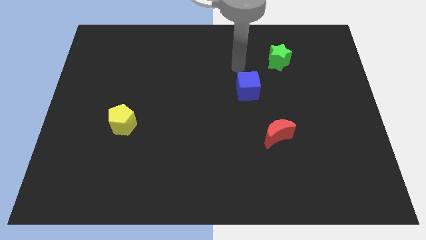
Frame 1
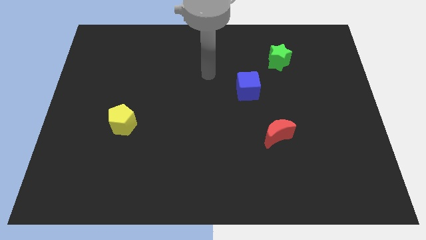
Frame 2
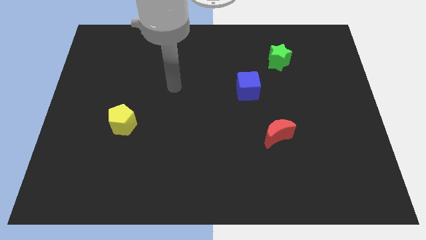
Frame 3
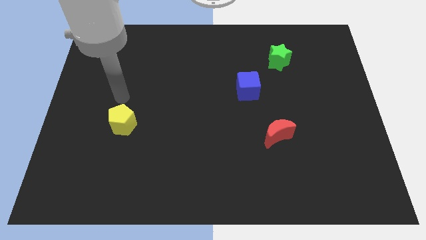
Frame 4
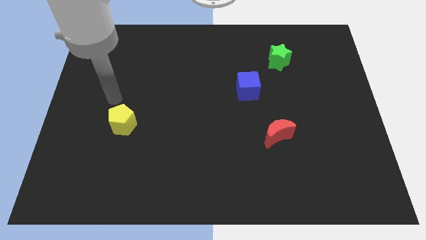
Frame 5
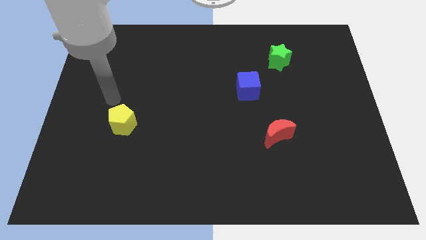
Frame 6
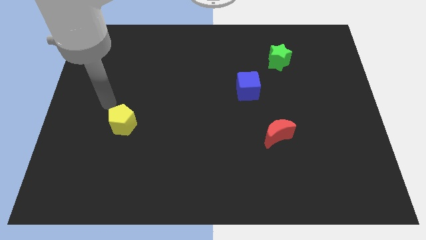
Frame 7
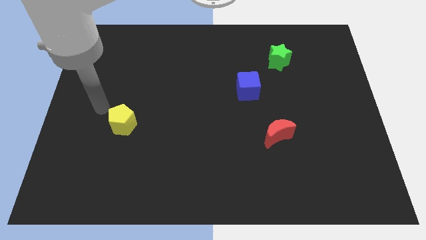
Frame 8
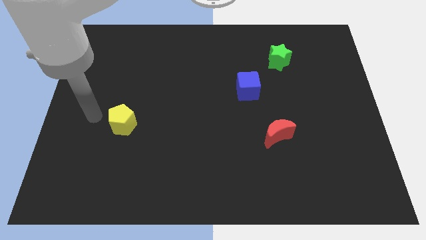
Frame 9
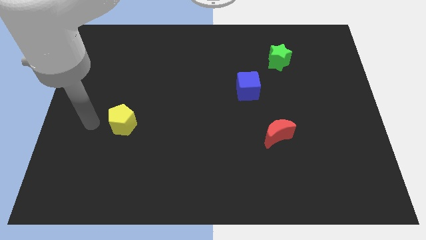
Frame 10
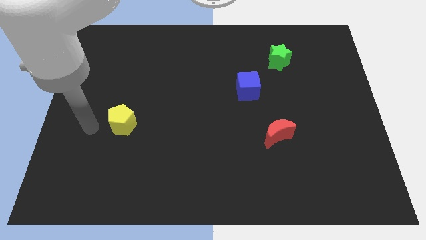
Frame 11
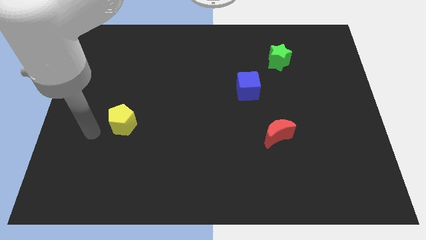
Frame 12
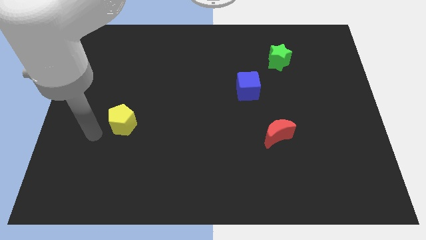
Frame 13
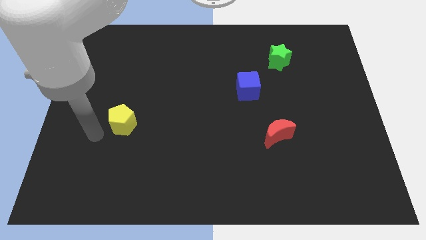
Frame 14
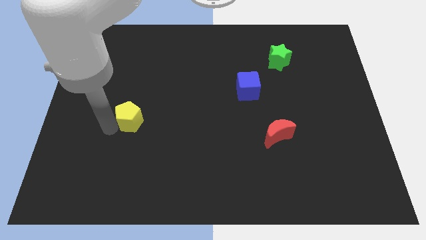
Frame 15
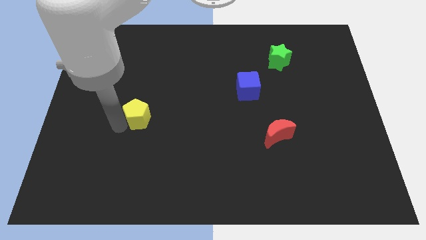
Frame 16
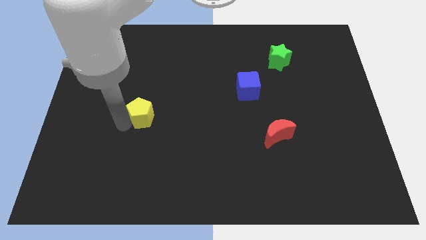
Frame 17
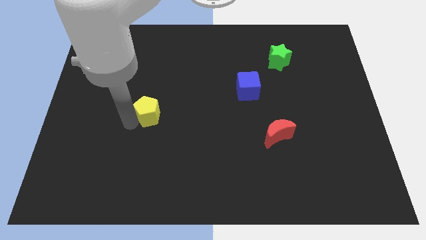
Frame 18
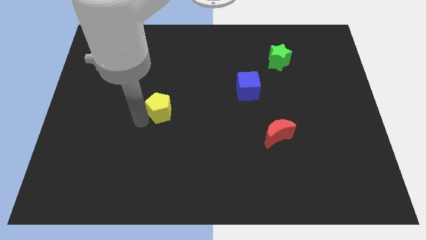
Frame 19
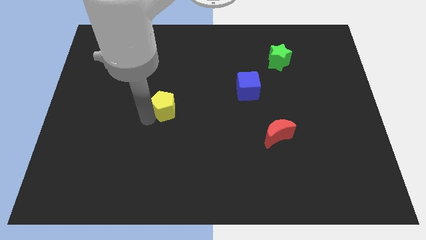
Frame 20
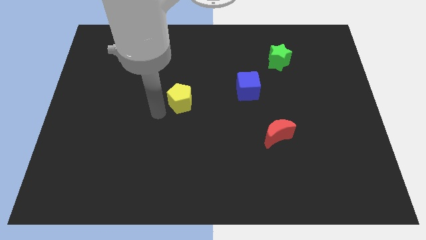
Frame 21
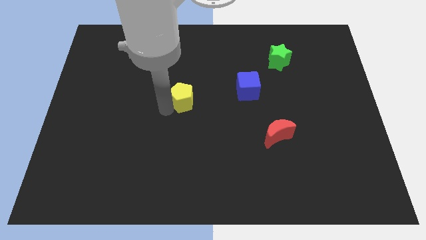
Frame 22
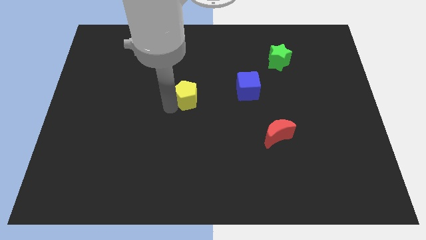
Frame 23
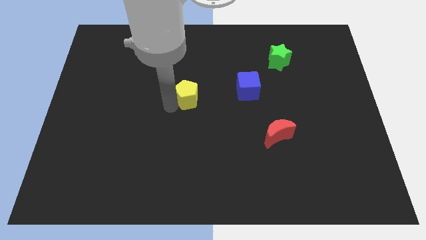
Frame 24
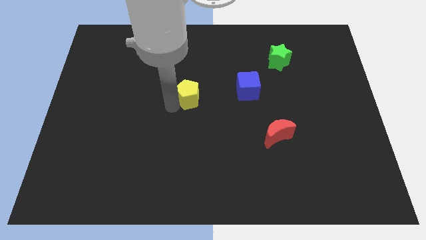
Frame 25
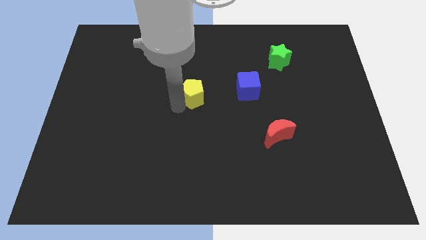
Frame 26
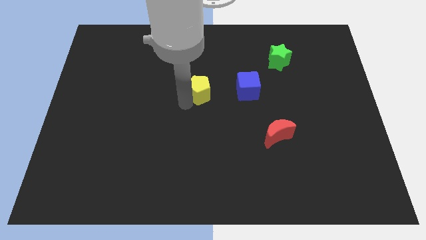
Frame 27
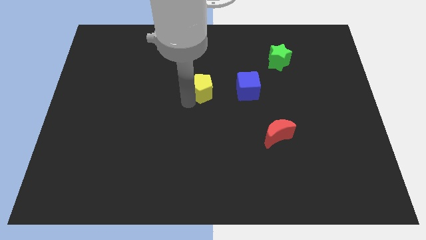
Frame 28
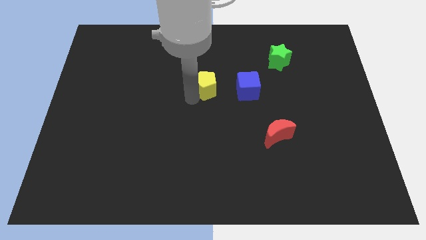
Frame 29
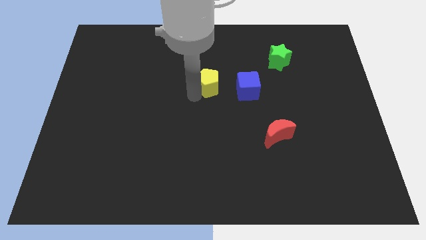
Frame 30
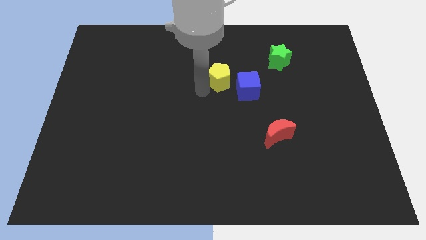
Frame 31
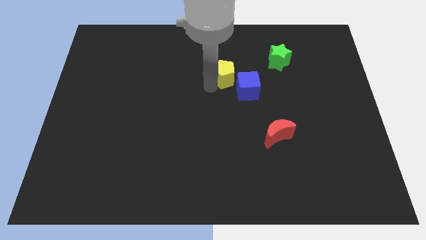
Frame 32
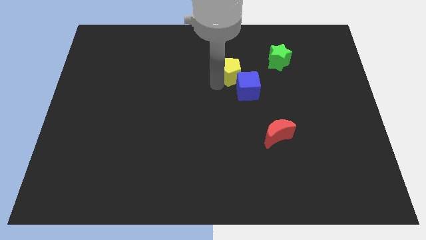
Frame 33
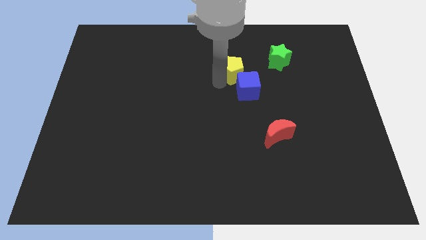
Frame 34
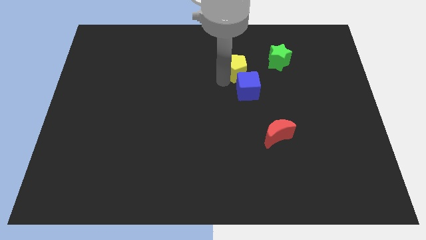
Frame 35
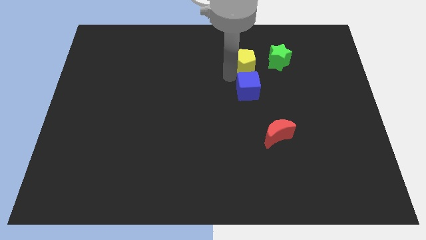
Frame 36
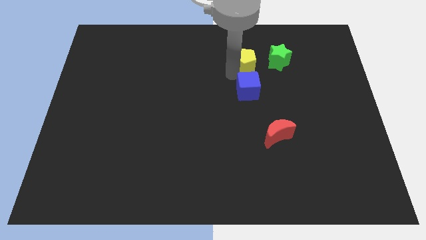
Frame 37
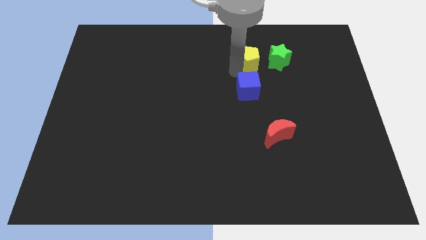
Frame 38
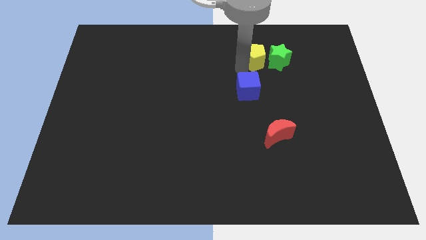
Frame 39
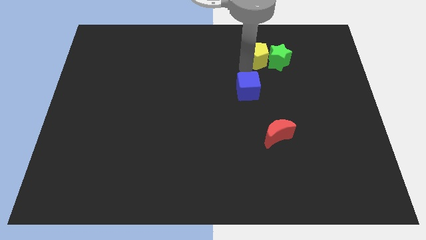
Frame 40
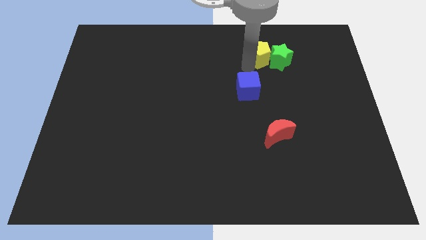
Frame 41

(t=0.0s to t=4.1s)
push the pentagon to the star

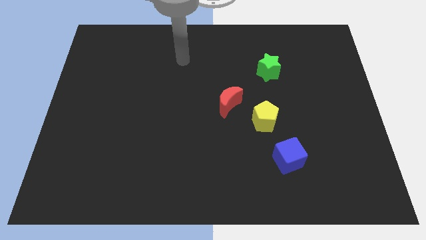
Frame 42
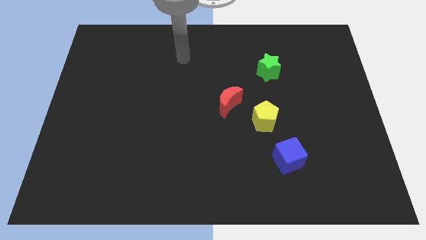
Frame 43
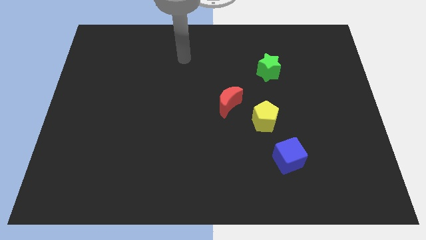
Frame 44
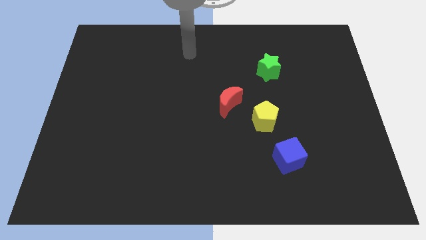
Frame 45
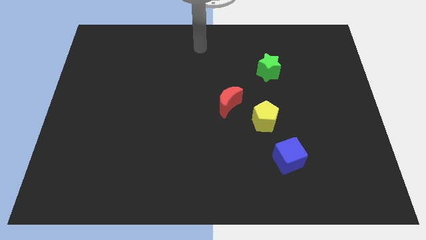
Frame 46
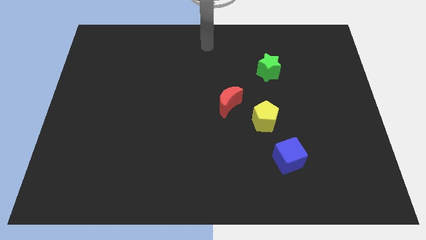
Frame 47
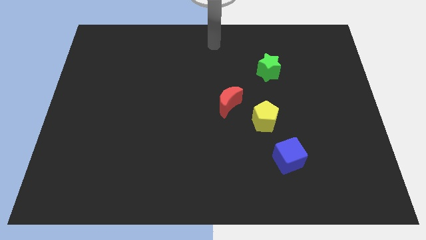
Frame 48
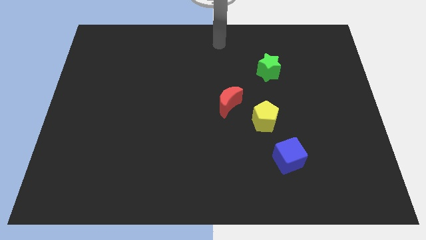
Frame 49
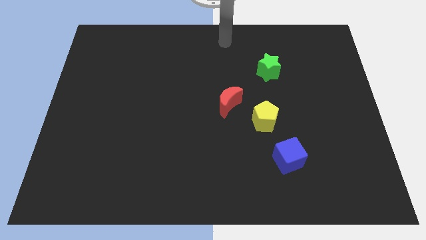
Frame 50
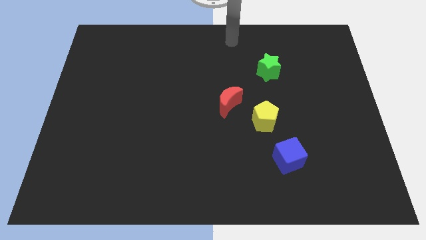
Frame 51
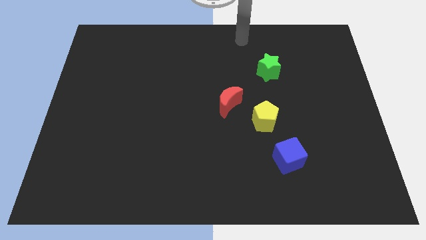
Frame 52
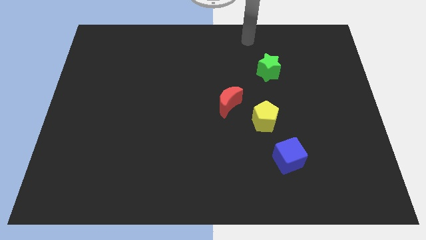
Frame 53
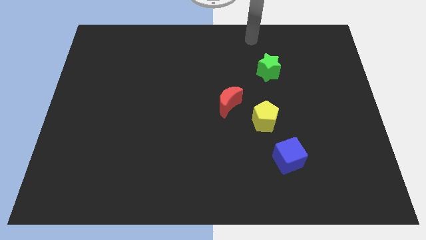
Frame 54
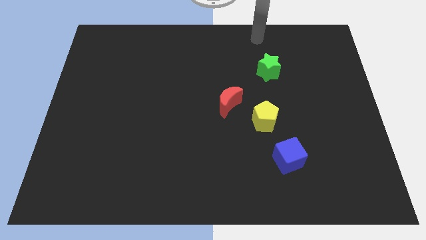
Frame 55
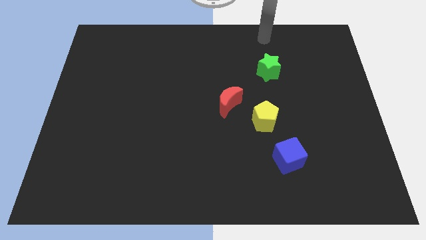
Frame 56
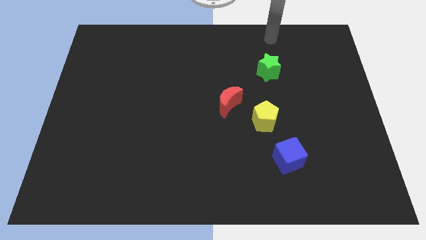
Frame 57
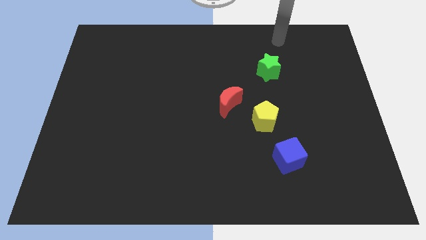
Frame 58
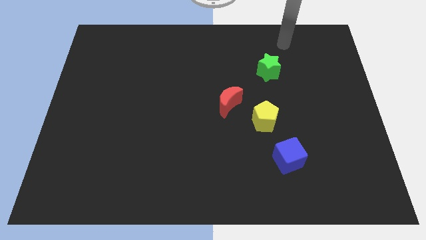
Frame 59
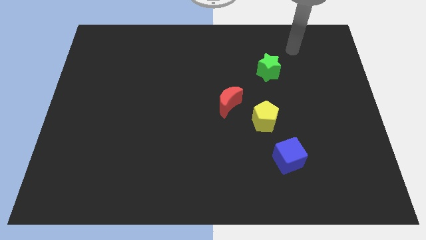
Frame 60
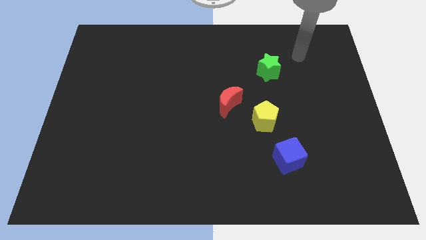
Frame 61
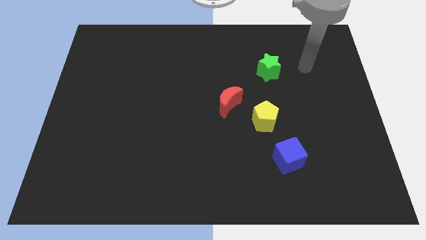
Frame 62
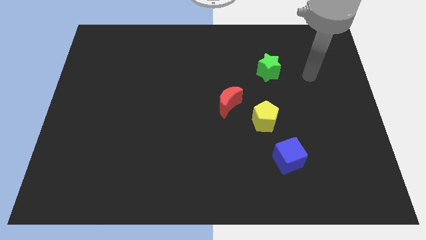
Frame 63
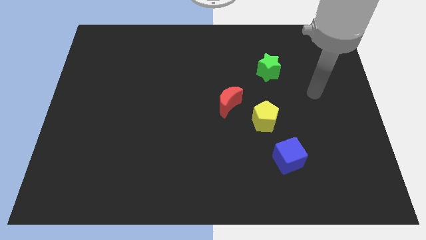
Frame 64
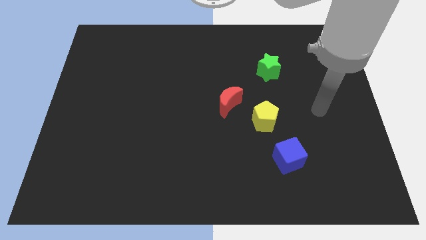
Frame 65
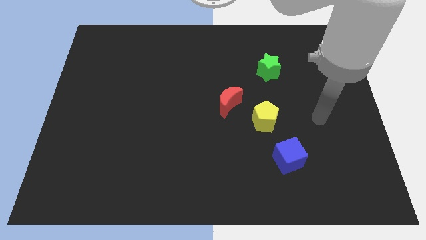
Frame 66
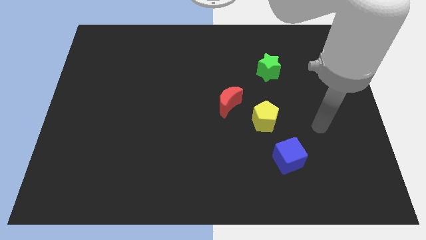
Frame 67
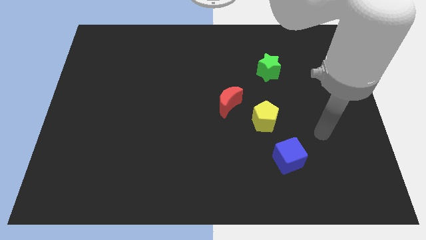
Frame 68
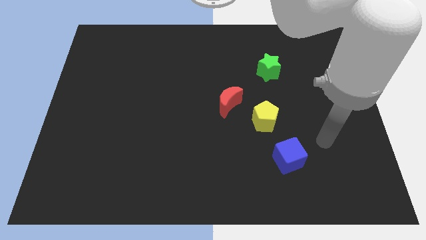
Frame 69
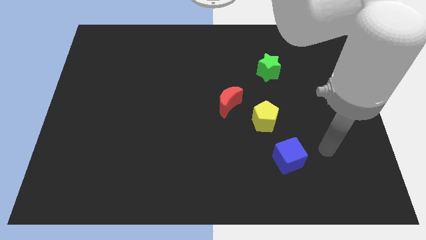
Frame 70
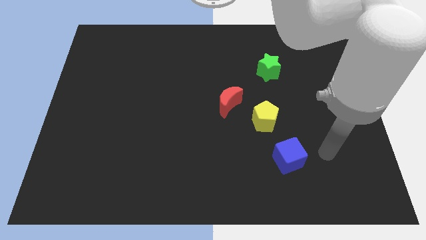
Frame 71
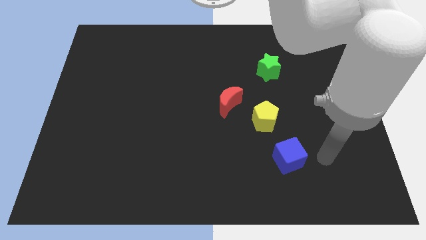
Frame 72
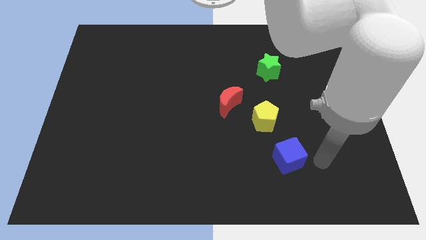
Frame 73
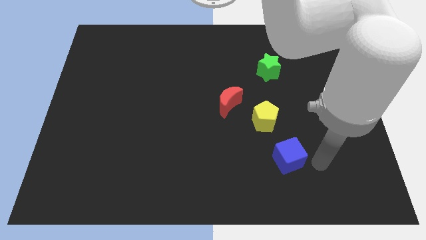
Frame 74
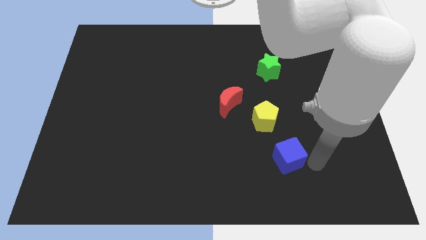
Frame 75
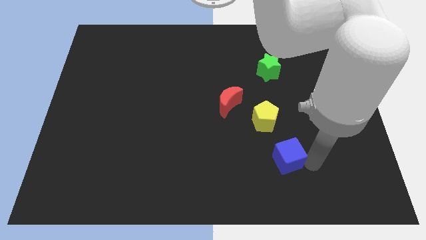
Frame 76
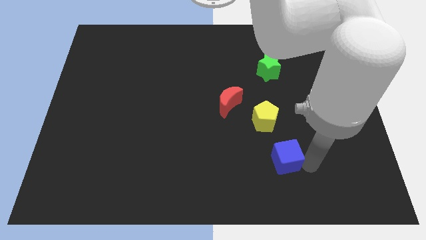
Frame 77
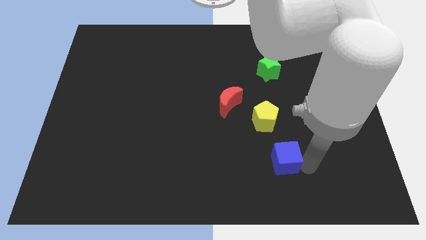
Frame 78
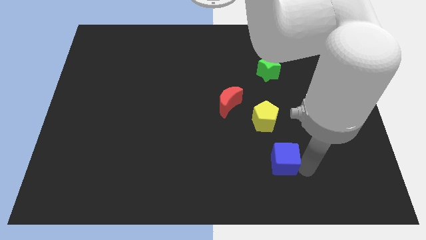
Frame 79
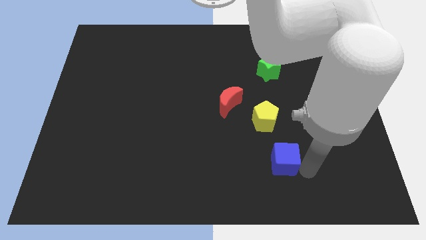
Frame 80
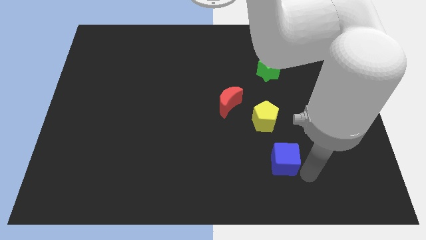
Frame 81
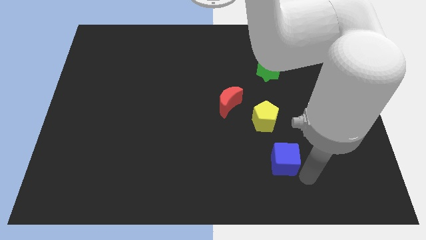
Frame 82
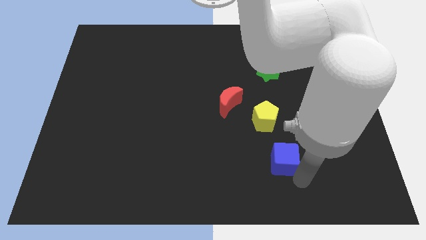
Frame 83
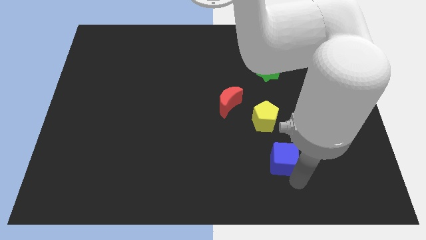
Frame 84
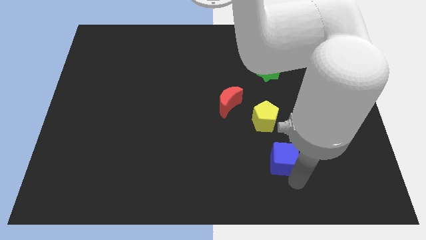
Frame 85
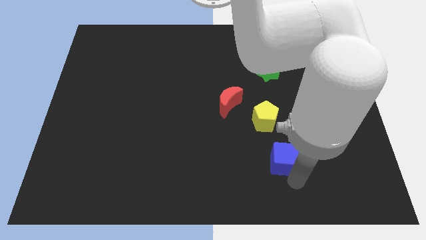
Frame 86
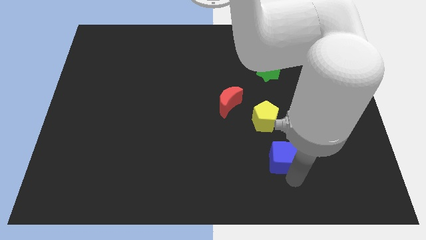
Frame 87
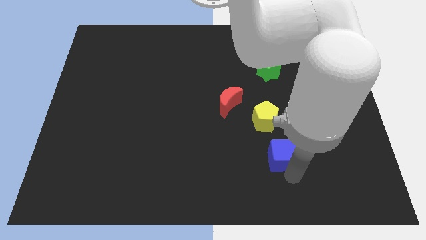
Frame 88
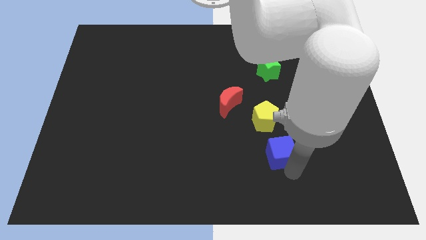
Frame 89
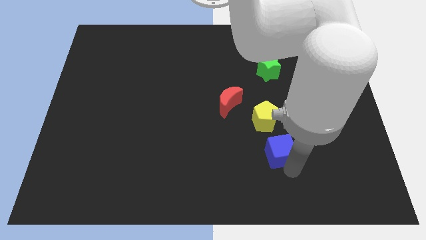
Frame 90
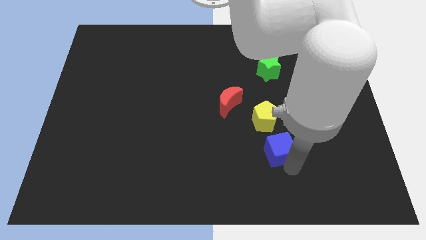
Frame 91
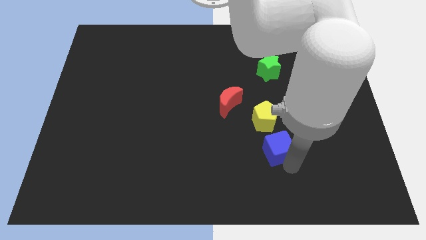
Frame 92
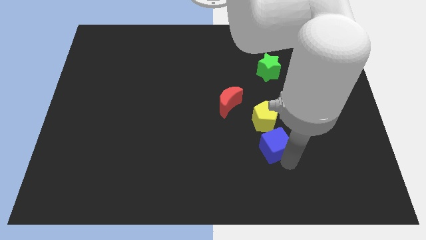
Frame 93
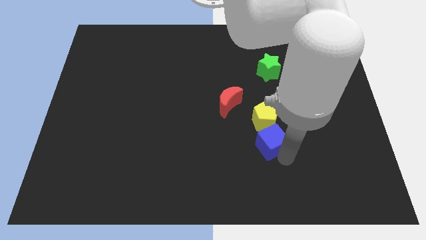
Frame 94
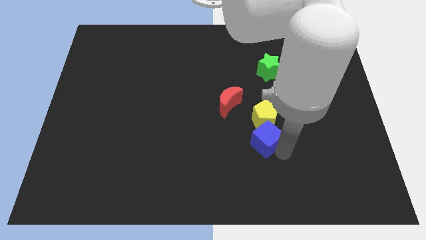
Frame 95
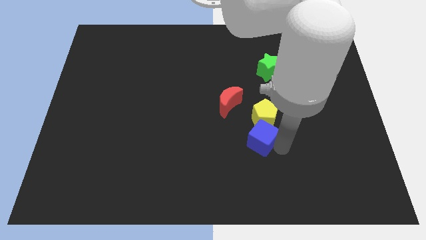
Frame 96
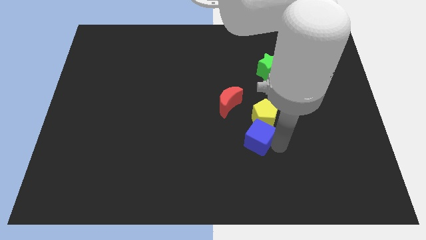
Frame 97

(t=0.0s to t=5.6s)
push the blue cube to the yellow pentagon
